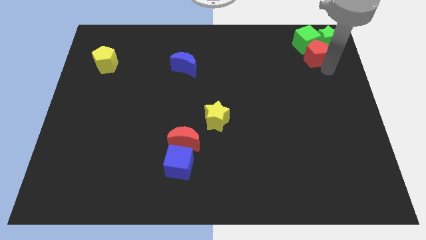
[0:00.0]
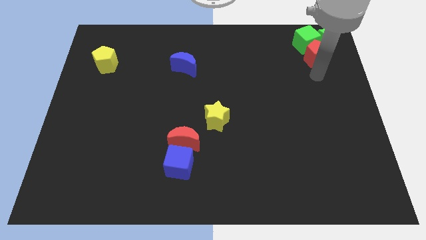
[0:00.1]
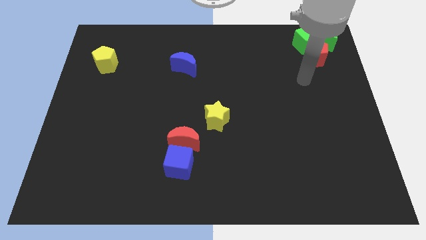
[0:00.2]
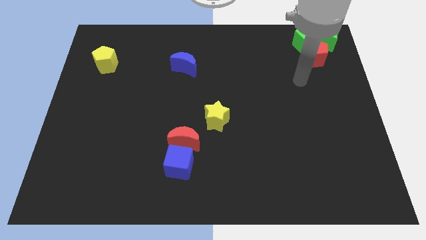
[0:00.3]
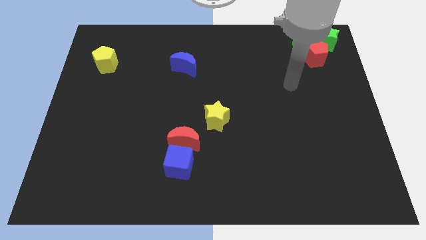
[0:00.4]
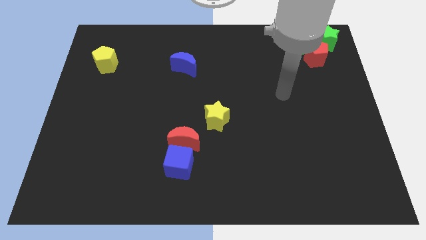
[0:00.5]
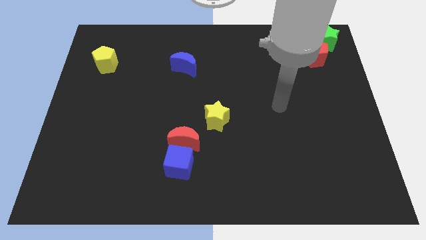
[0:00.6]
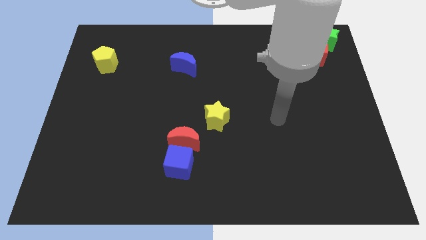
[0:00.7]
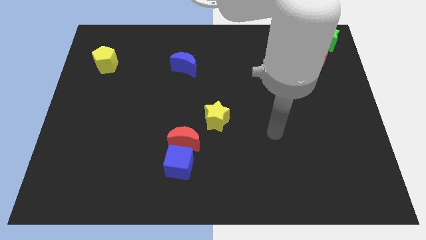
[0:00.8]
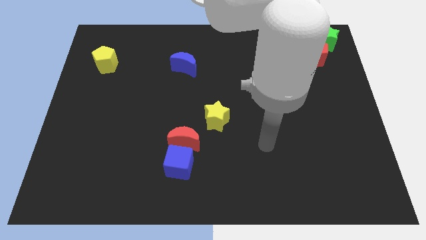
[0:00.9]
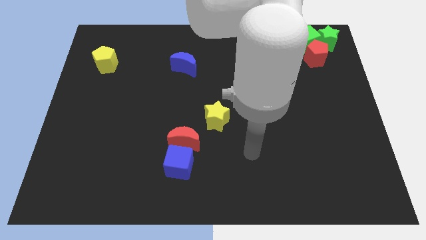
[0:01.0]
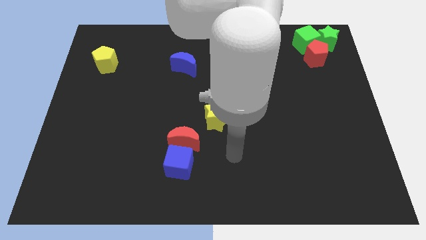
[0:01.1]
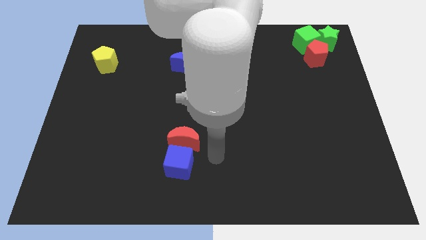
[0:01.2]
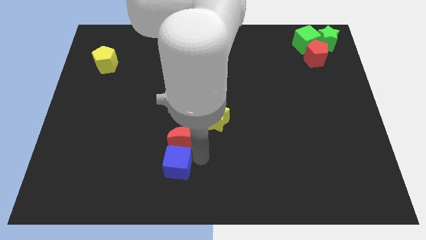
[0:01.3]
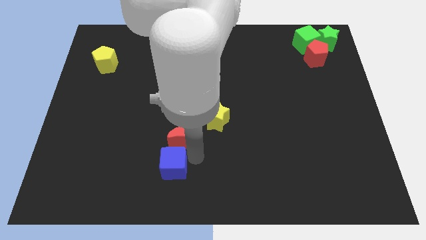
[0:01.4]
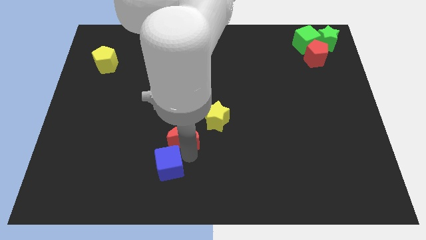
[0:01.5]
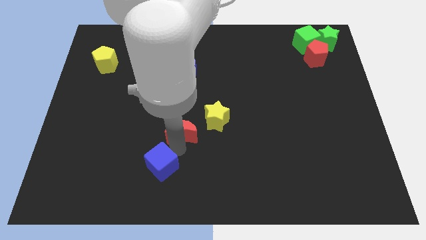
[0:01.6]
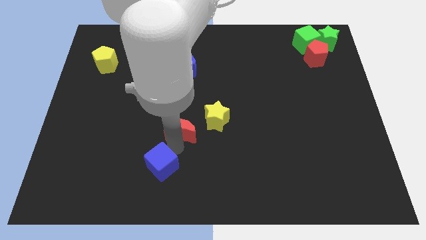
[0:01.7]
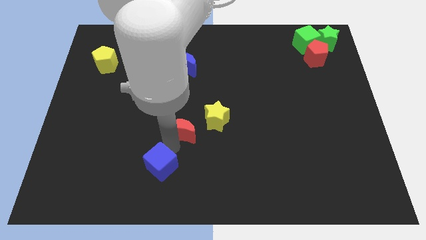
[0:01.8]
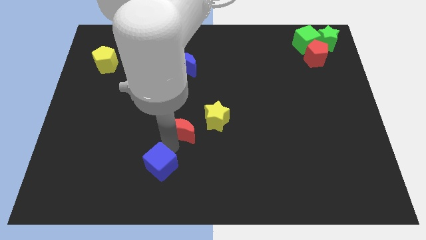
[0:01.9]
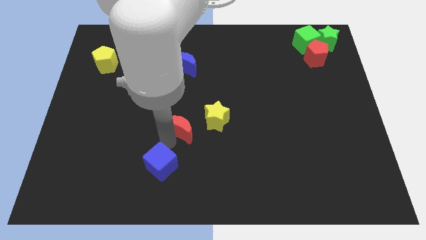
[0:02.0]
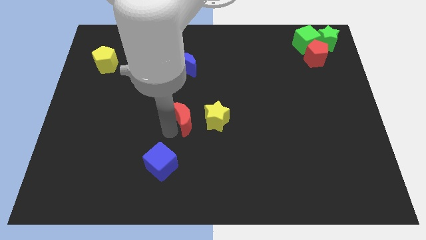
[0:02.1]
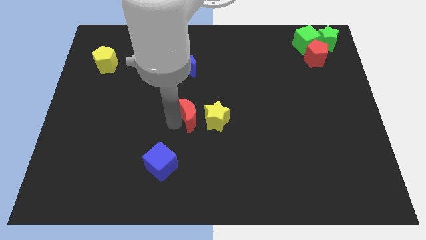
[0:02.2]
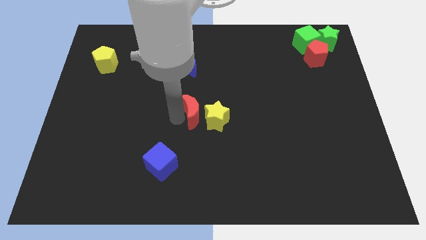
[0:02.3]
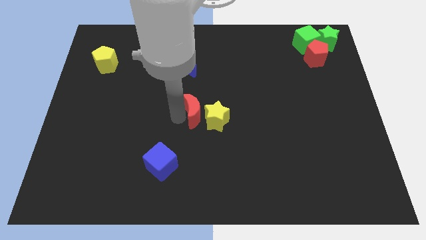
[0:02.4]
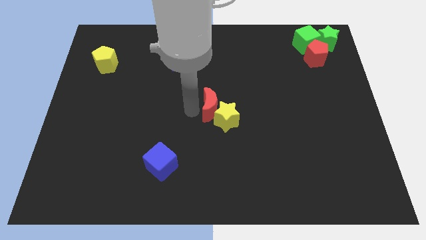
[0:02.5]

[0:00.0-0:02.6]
separate the blue cube and red moon

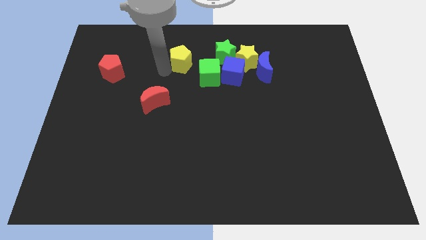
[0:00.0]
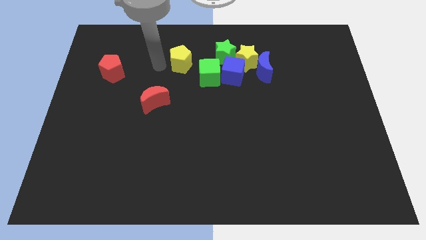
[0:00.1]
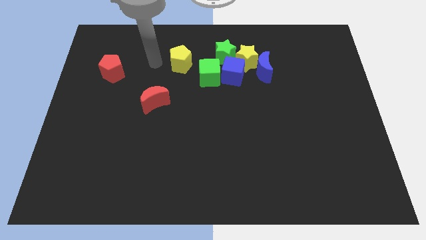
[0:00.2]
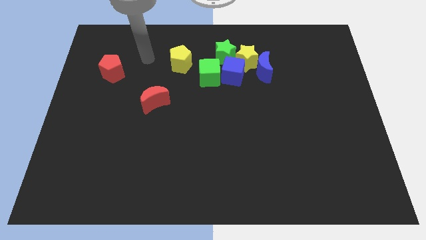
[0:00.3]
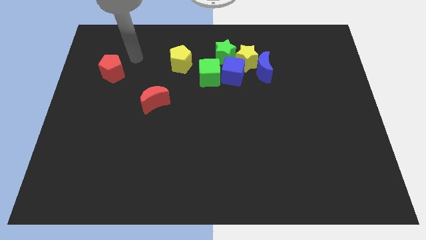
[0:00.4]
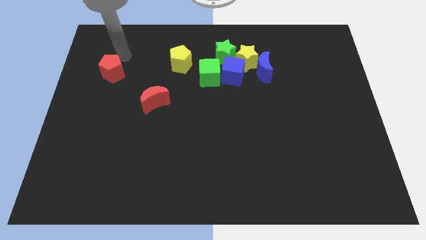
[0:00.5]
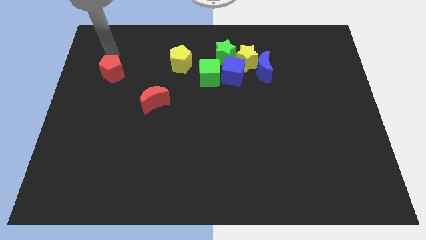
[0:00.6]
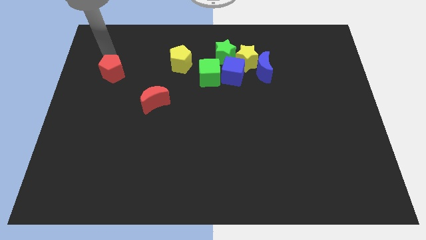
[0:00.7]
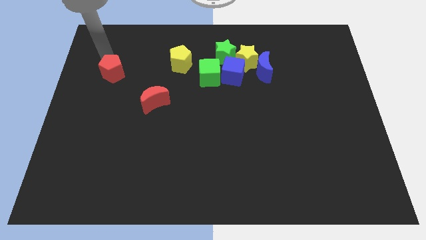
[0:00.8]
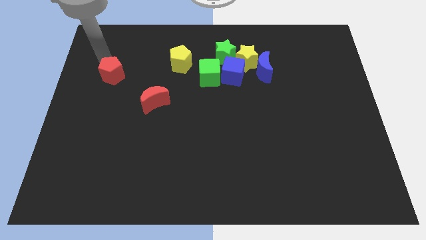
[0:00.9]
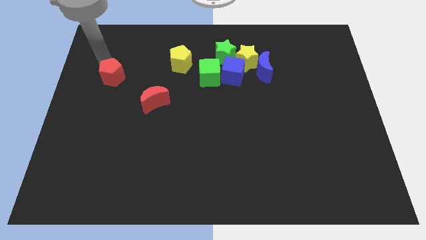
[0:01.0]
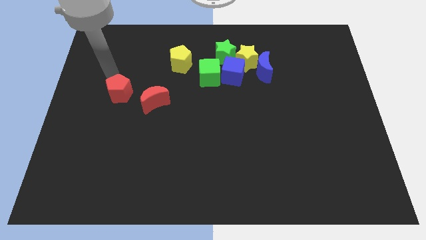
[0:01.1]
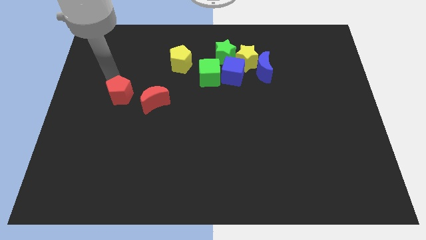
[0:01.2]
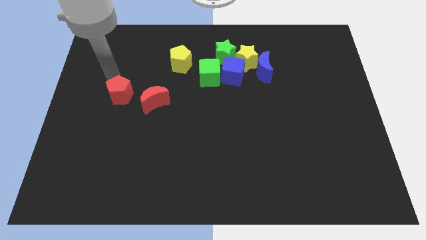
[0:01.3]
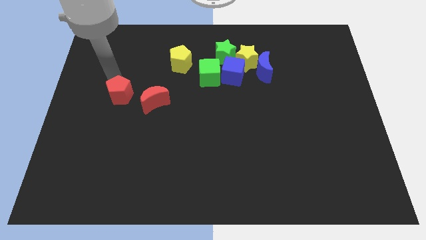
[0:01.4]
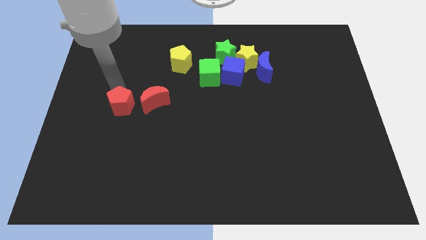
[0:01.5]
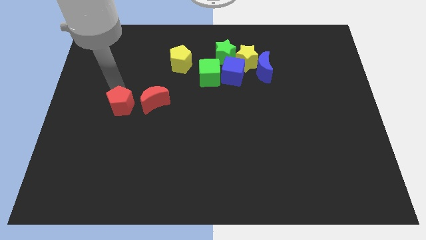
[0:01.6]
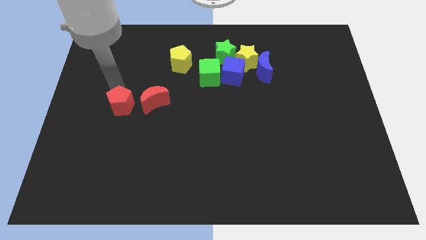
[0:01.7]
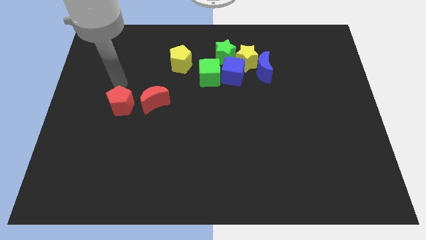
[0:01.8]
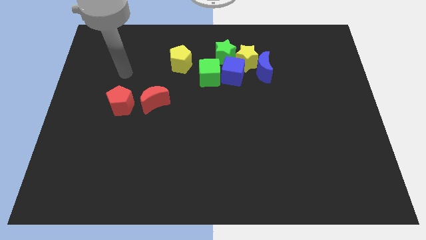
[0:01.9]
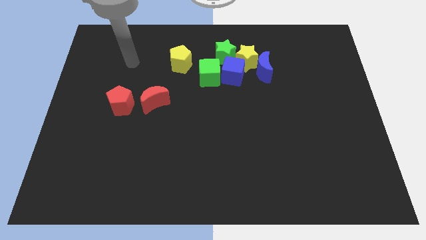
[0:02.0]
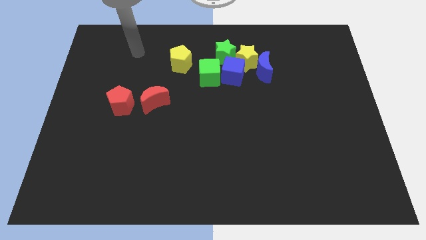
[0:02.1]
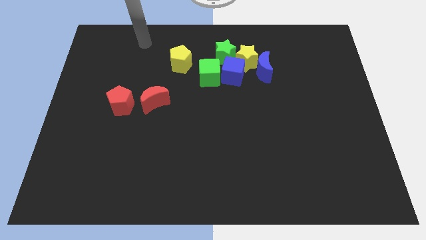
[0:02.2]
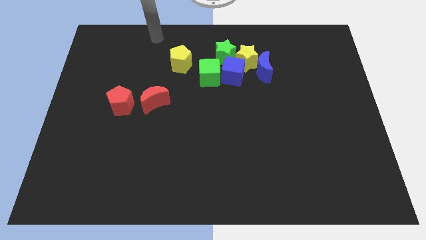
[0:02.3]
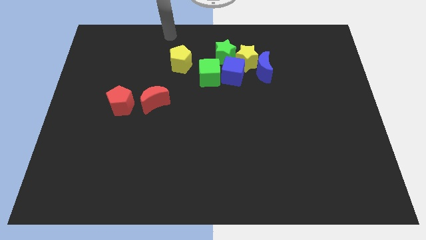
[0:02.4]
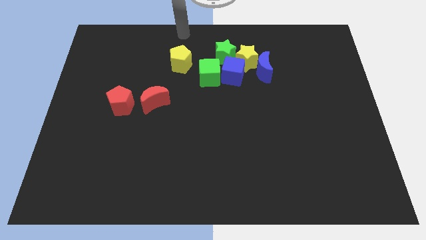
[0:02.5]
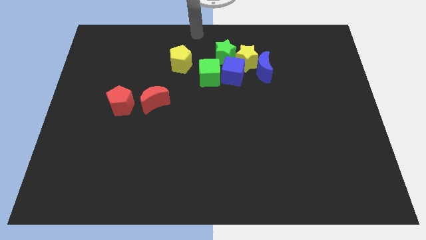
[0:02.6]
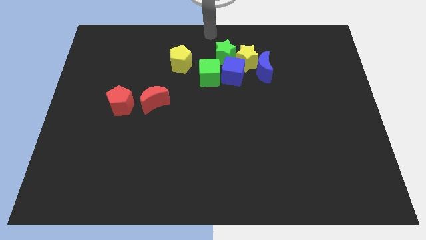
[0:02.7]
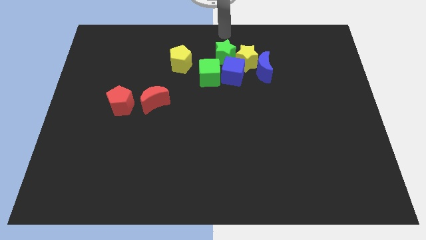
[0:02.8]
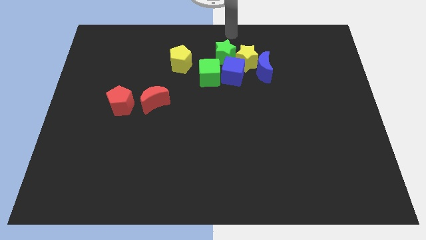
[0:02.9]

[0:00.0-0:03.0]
put the red pentagon at the left side of the red moon

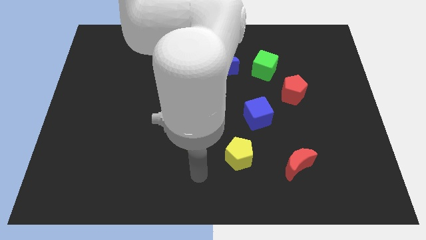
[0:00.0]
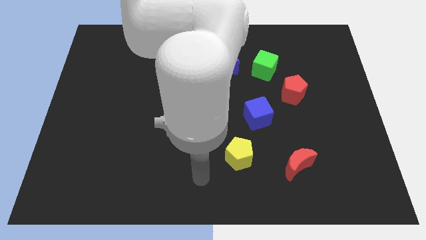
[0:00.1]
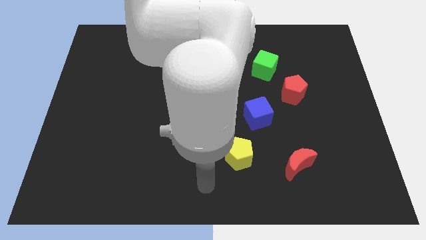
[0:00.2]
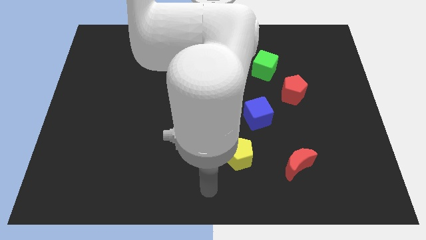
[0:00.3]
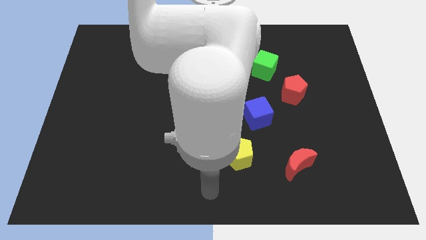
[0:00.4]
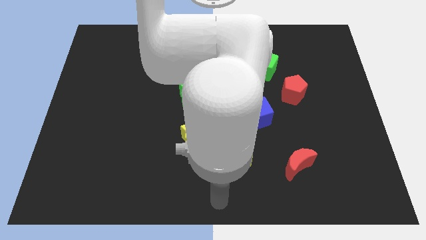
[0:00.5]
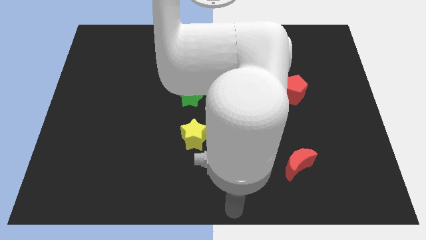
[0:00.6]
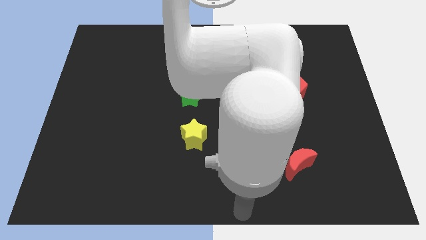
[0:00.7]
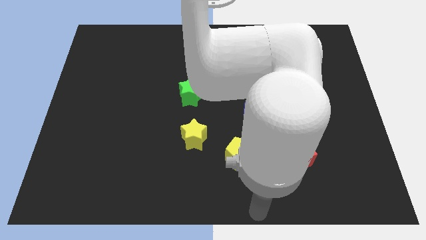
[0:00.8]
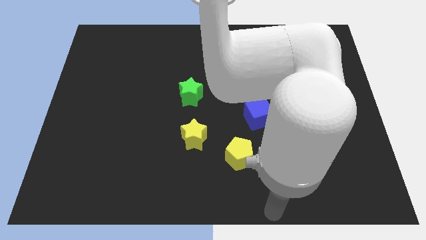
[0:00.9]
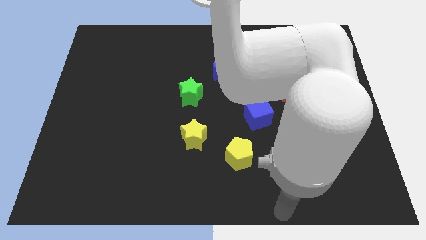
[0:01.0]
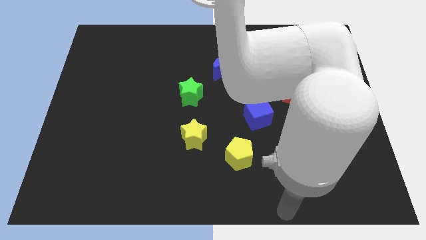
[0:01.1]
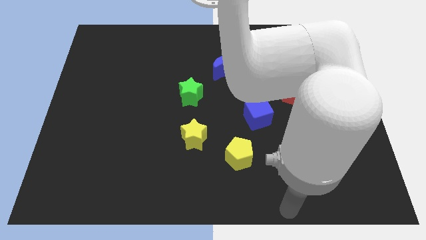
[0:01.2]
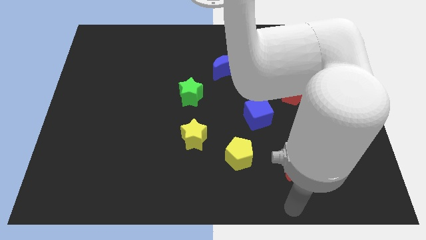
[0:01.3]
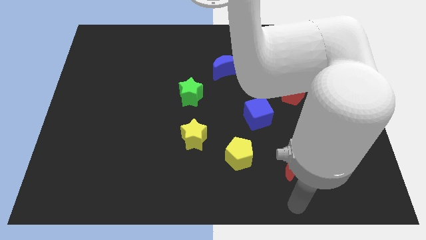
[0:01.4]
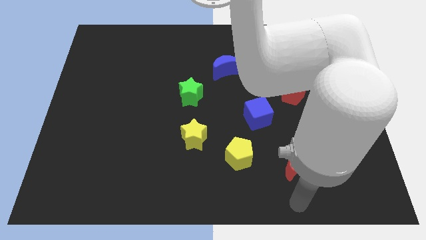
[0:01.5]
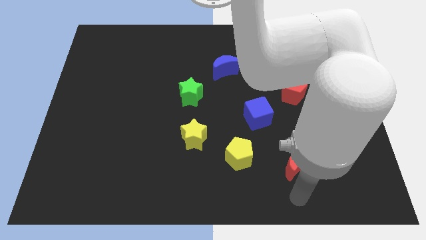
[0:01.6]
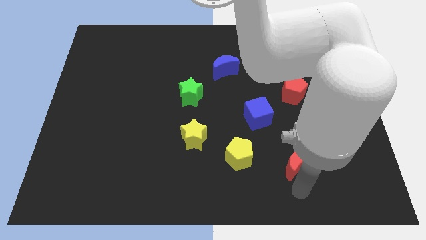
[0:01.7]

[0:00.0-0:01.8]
move the arm towards the bottom of the red crescent

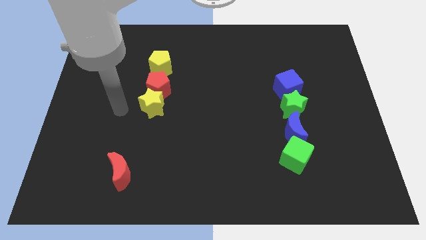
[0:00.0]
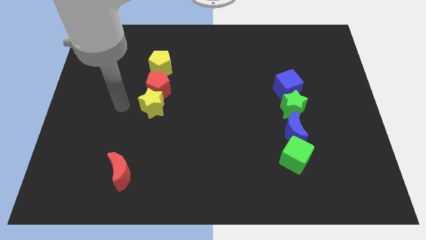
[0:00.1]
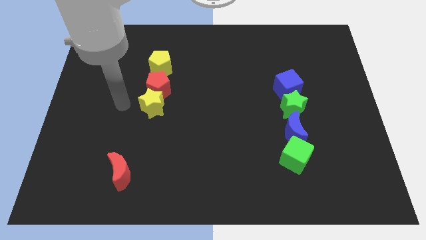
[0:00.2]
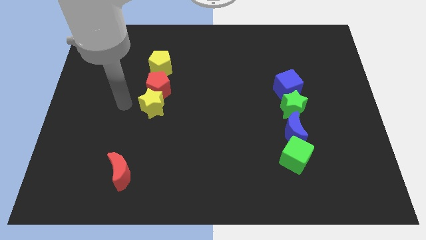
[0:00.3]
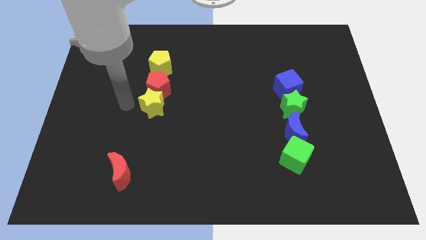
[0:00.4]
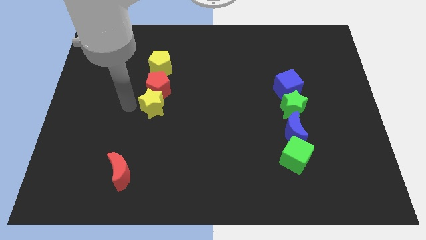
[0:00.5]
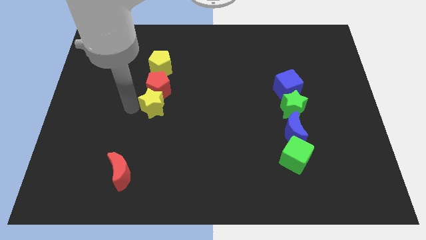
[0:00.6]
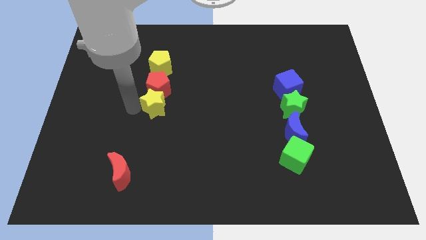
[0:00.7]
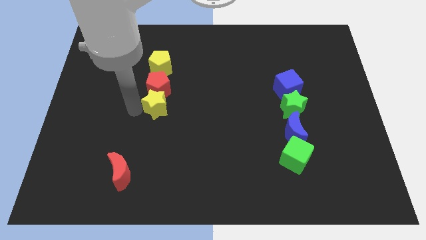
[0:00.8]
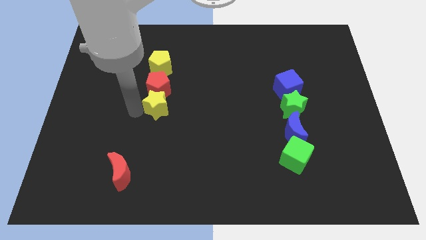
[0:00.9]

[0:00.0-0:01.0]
move yellow star slightly right

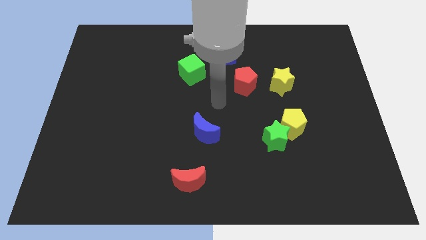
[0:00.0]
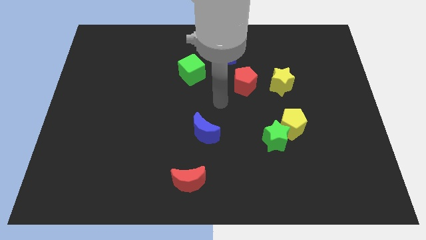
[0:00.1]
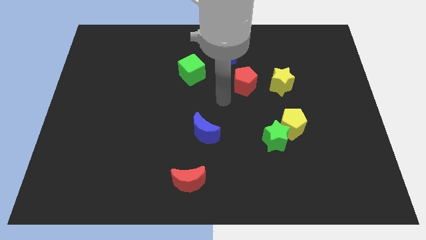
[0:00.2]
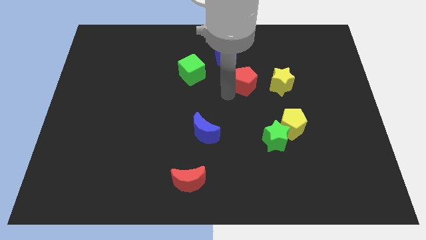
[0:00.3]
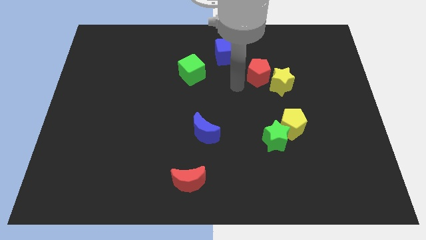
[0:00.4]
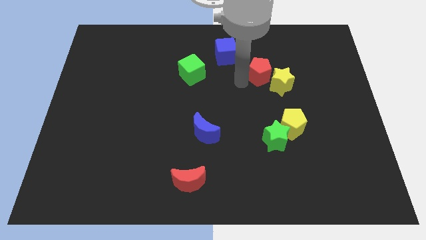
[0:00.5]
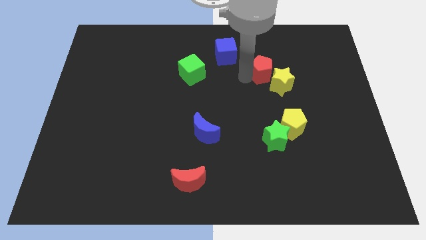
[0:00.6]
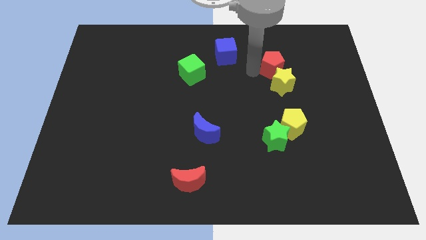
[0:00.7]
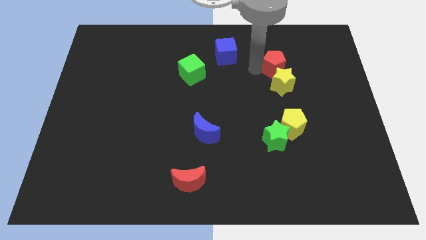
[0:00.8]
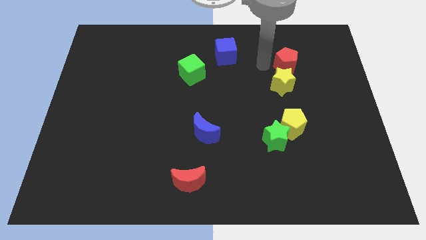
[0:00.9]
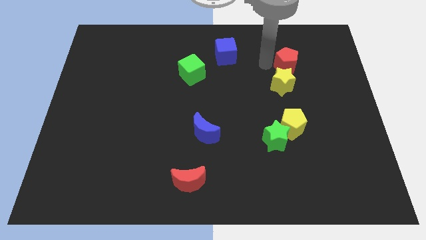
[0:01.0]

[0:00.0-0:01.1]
move red pentagon on top of yellow star
